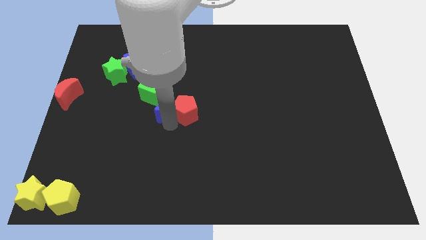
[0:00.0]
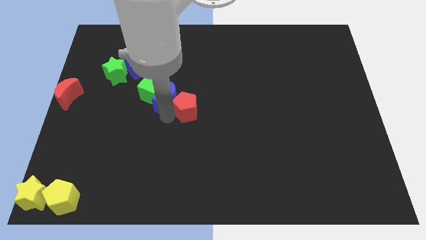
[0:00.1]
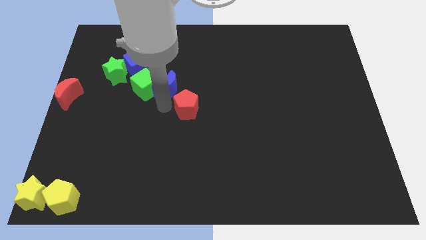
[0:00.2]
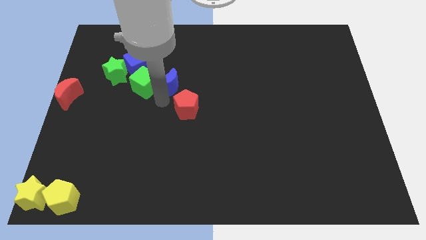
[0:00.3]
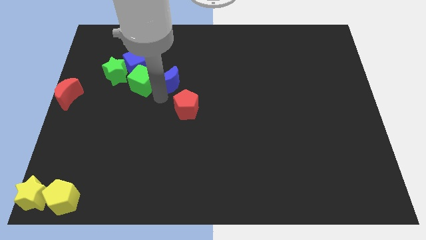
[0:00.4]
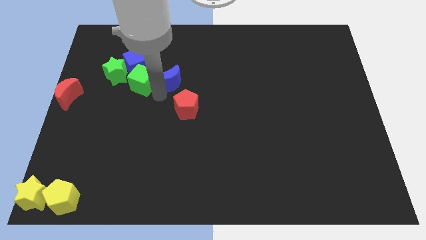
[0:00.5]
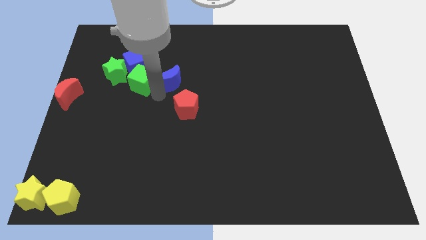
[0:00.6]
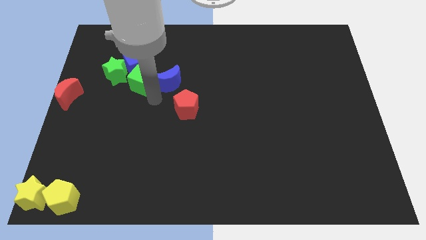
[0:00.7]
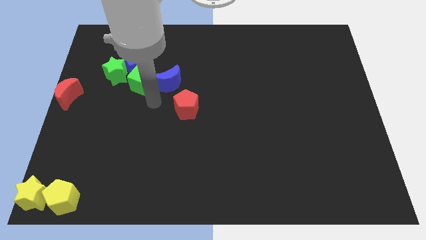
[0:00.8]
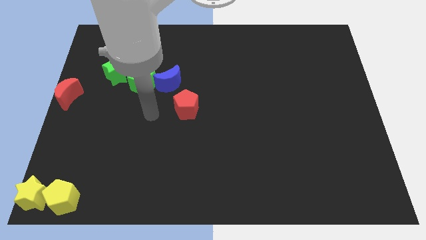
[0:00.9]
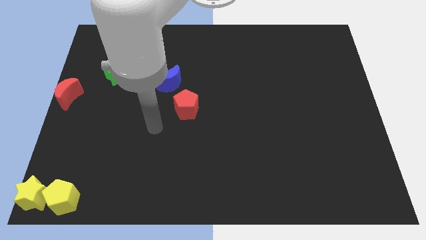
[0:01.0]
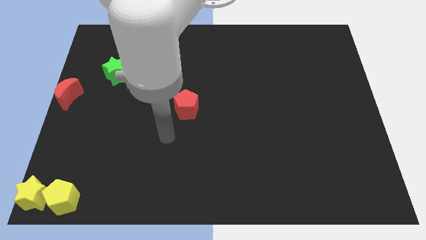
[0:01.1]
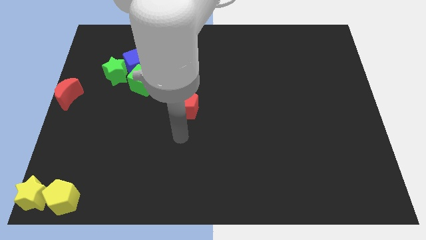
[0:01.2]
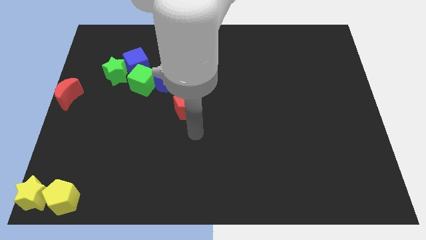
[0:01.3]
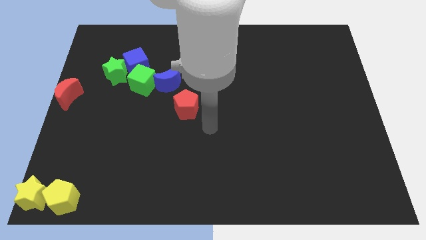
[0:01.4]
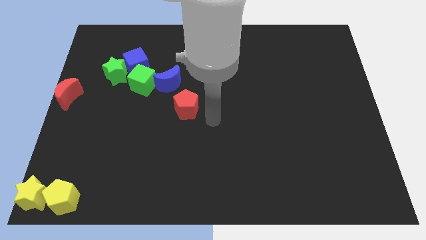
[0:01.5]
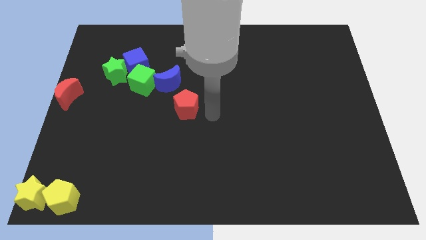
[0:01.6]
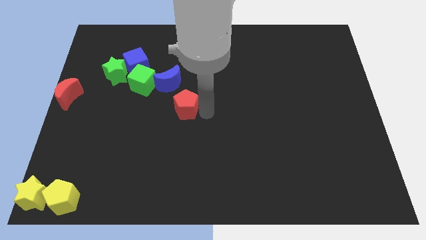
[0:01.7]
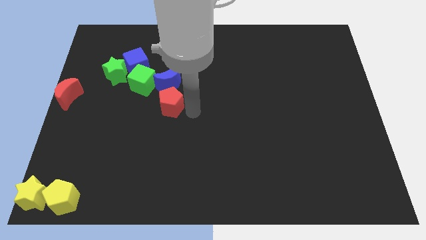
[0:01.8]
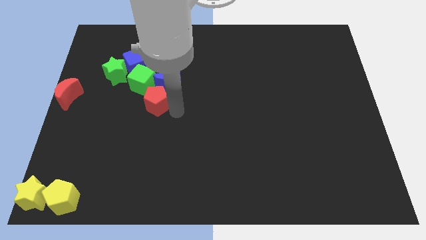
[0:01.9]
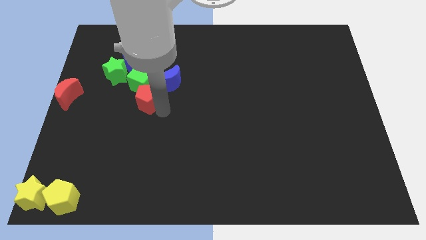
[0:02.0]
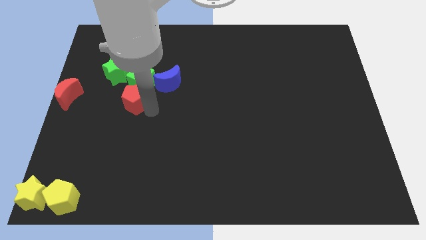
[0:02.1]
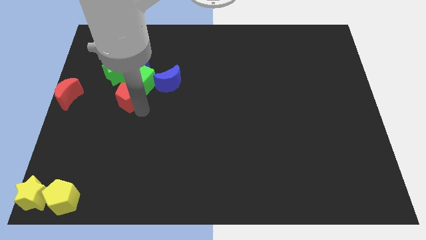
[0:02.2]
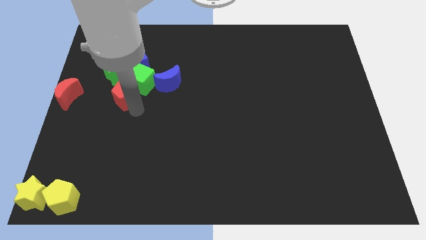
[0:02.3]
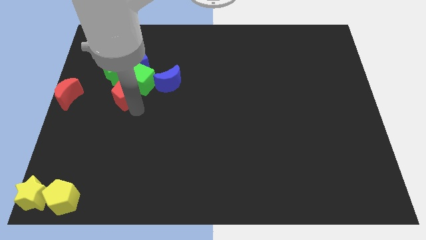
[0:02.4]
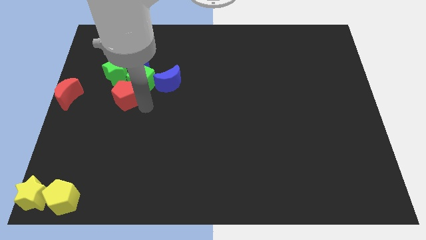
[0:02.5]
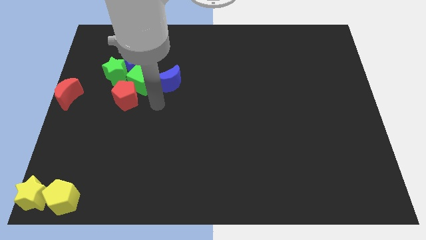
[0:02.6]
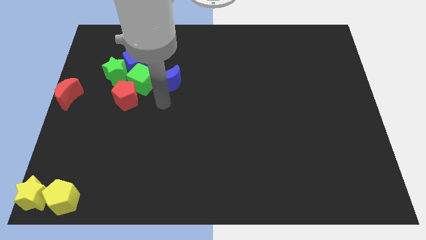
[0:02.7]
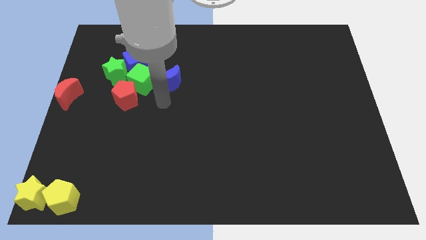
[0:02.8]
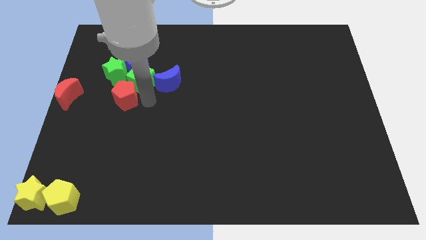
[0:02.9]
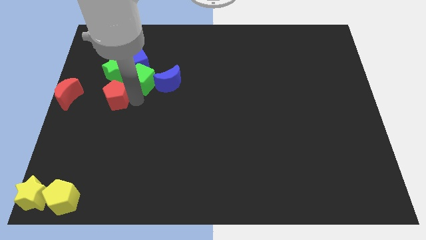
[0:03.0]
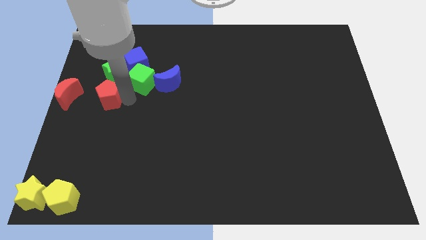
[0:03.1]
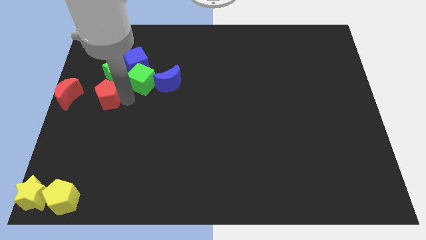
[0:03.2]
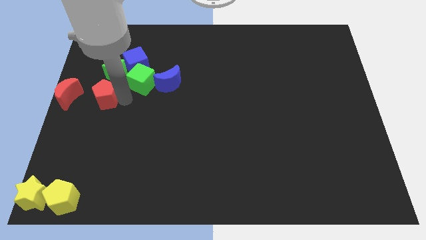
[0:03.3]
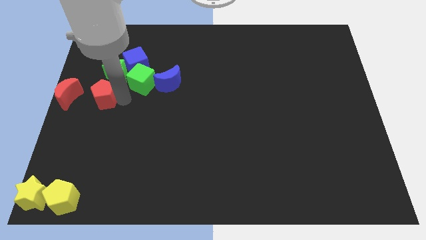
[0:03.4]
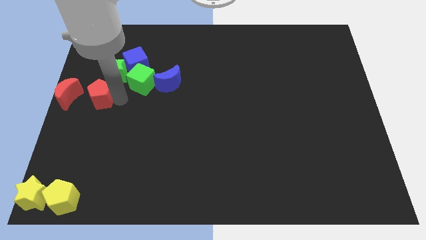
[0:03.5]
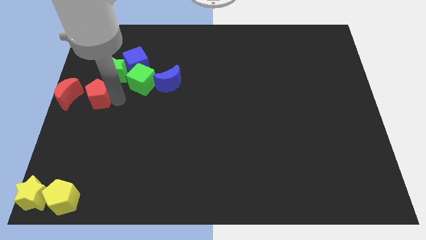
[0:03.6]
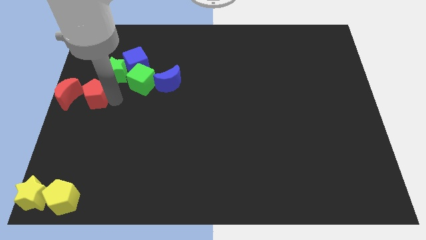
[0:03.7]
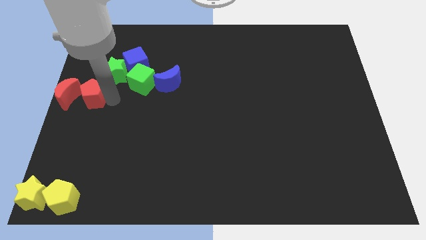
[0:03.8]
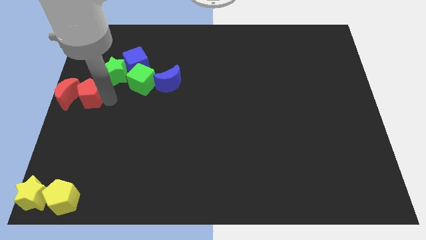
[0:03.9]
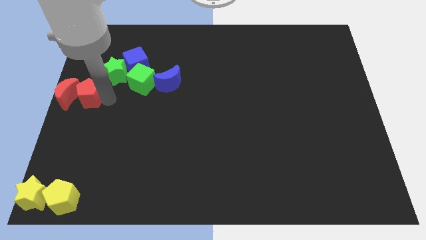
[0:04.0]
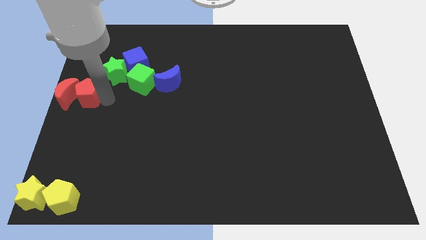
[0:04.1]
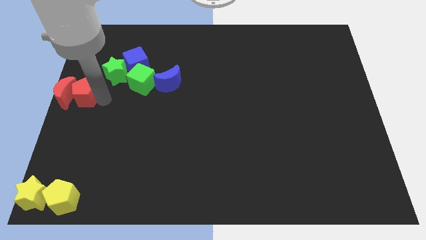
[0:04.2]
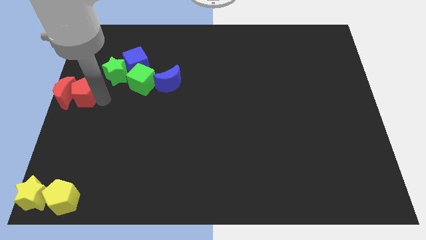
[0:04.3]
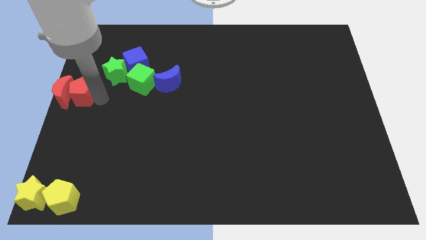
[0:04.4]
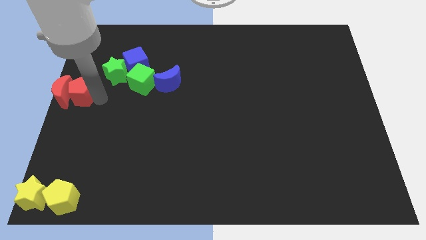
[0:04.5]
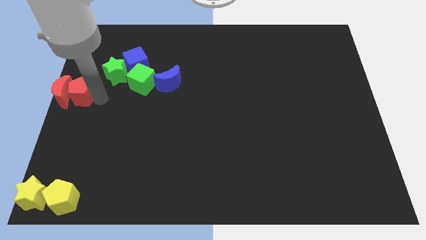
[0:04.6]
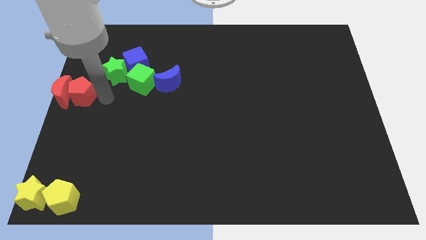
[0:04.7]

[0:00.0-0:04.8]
place the red pentagon at the right side of the red moon

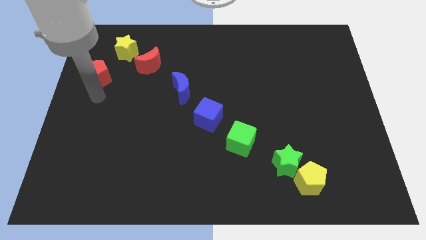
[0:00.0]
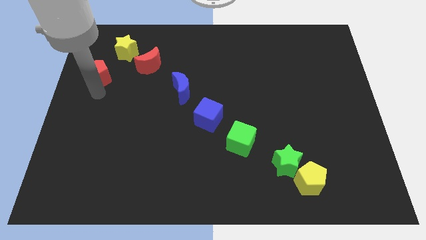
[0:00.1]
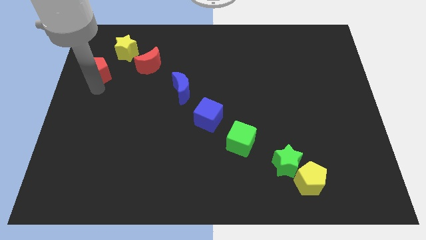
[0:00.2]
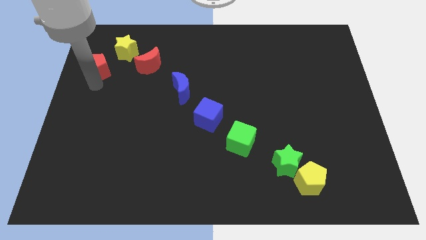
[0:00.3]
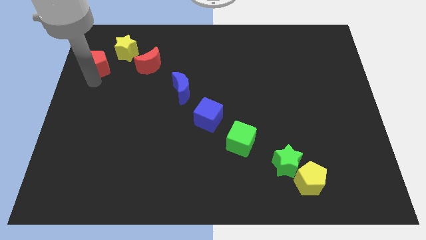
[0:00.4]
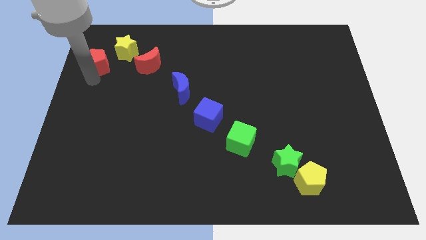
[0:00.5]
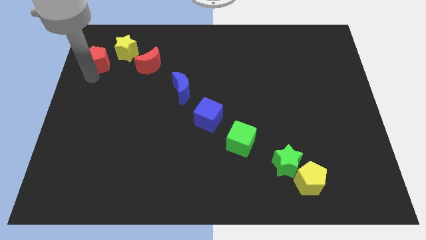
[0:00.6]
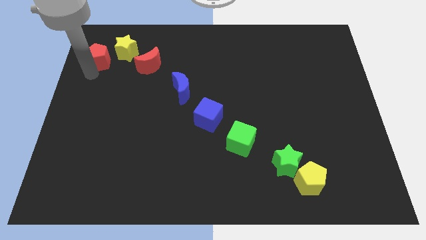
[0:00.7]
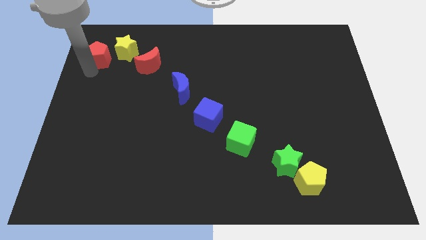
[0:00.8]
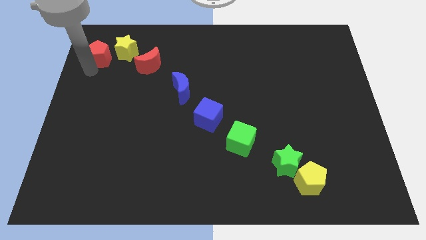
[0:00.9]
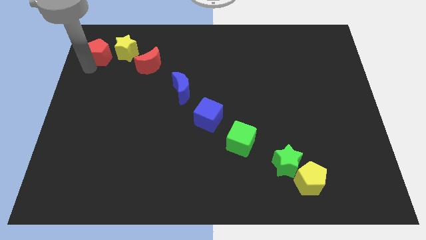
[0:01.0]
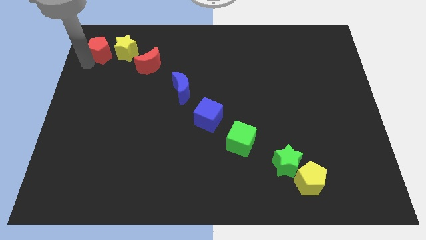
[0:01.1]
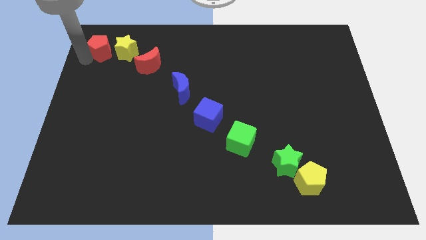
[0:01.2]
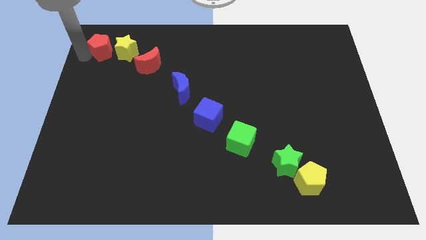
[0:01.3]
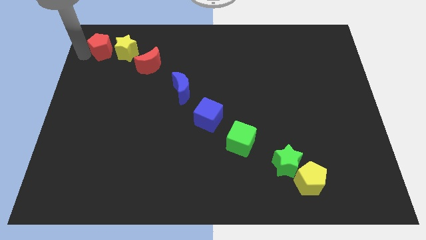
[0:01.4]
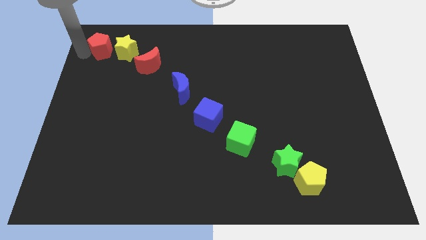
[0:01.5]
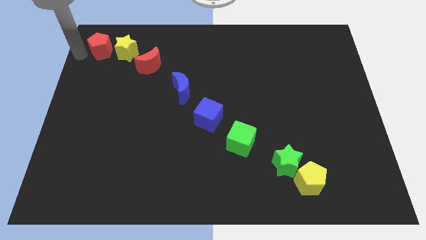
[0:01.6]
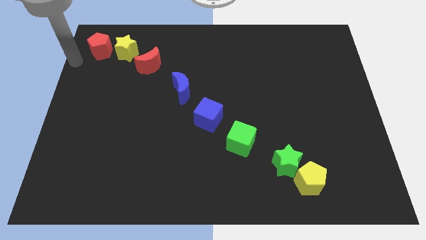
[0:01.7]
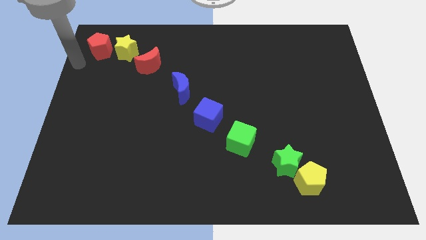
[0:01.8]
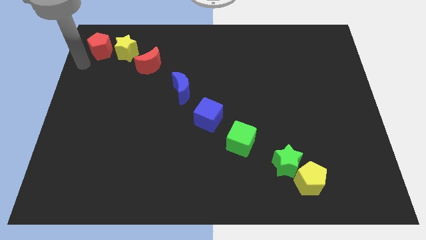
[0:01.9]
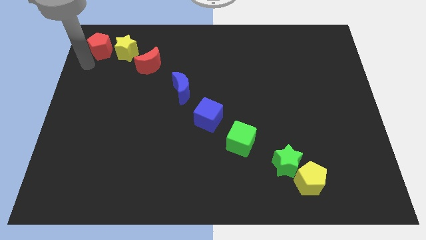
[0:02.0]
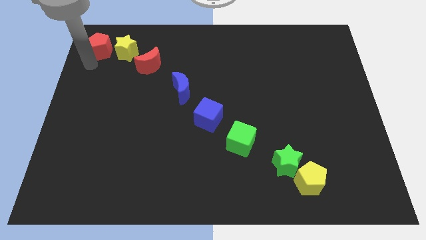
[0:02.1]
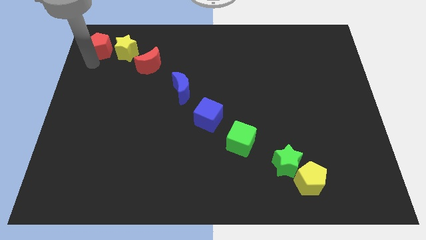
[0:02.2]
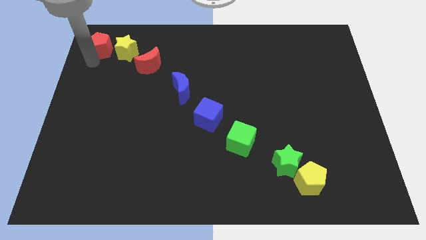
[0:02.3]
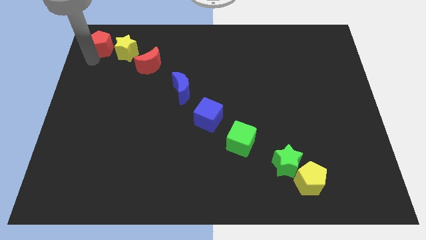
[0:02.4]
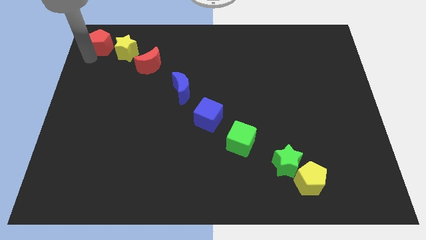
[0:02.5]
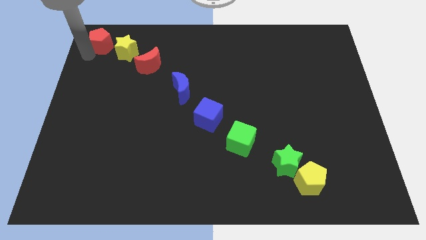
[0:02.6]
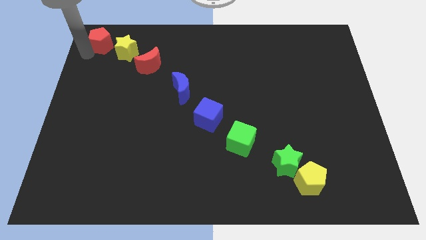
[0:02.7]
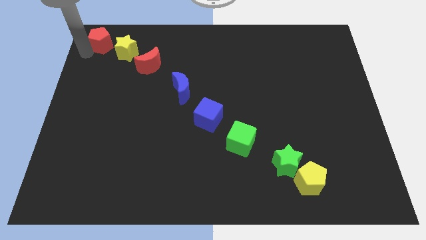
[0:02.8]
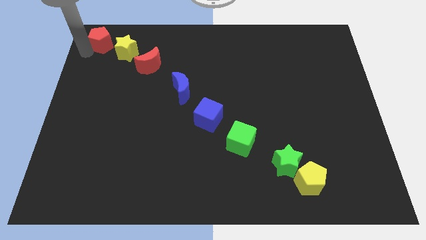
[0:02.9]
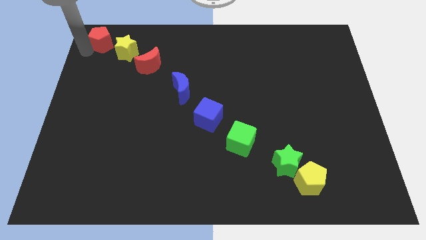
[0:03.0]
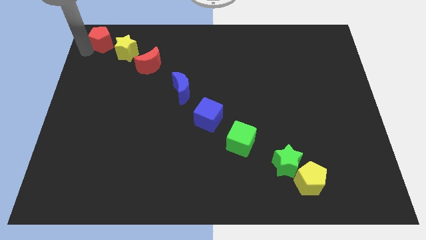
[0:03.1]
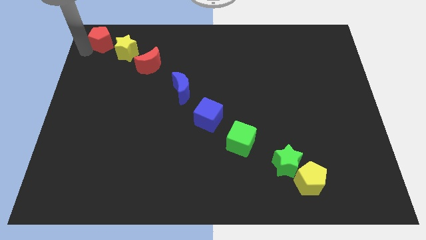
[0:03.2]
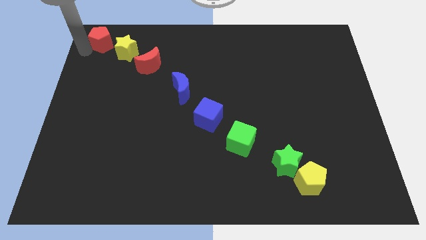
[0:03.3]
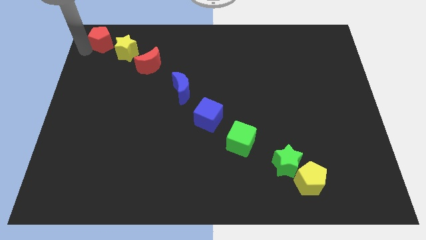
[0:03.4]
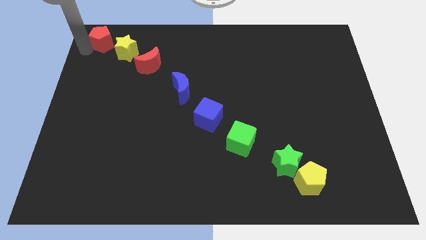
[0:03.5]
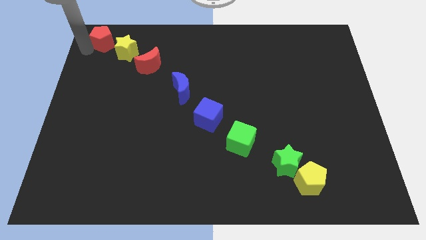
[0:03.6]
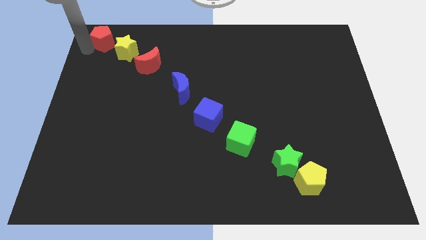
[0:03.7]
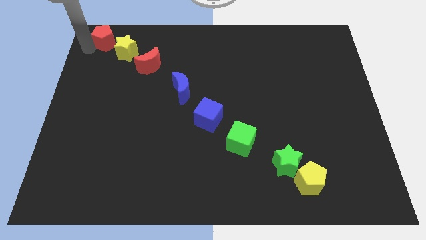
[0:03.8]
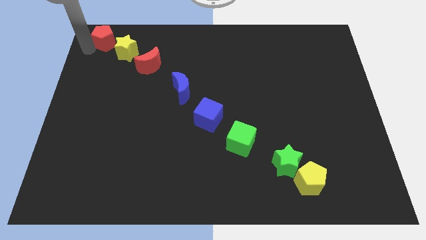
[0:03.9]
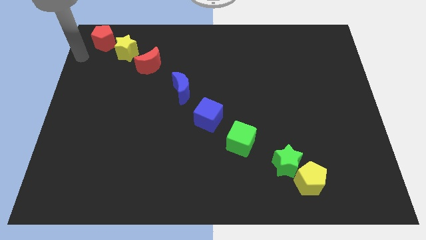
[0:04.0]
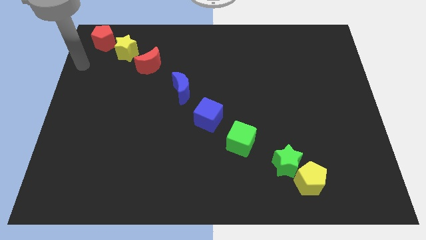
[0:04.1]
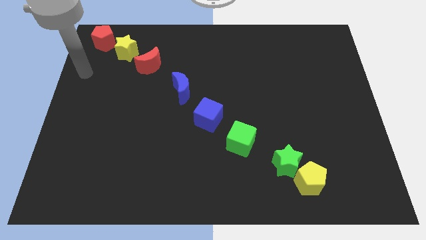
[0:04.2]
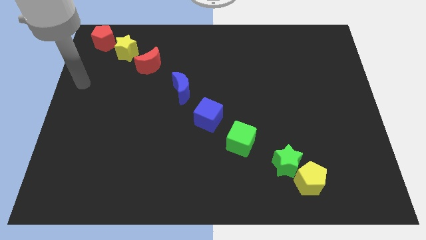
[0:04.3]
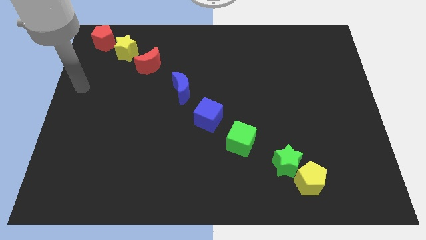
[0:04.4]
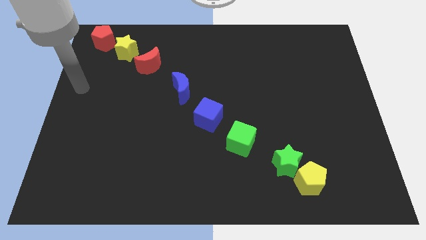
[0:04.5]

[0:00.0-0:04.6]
push the red pentagon at the top left corner of the board
